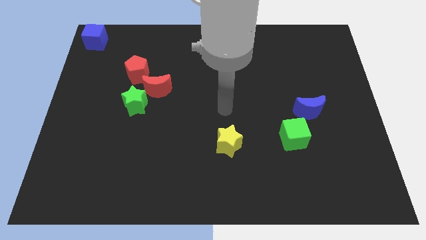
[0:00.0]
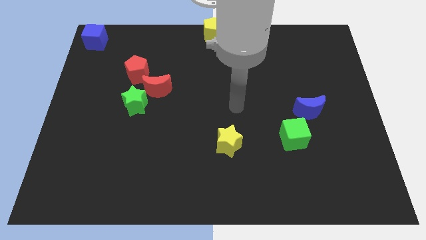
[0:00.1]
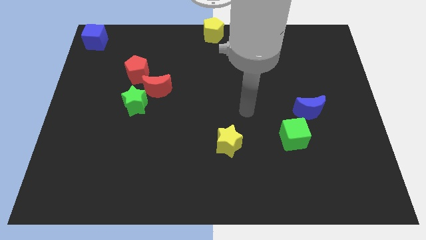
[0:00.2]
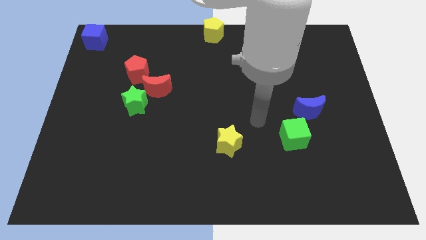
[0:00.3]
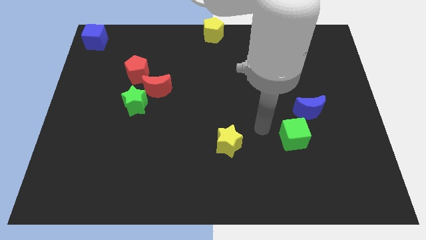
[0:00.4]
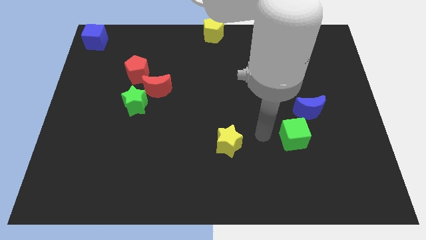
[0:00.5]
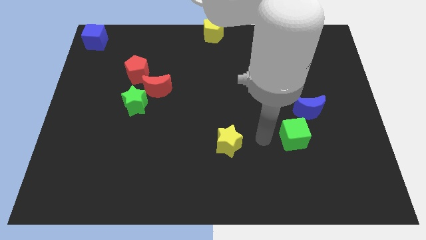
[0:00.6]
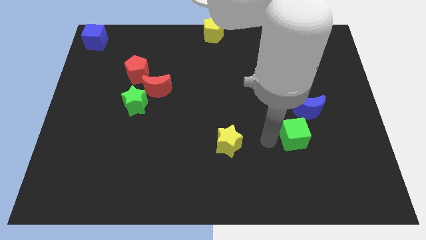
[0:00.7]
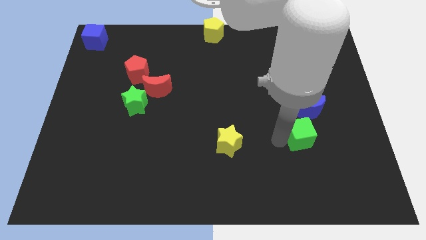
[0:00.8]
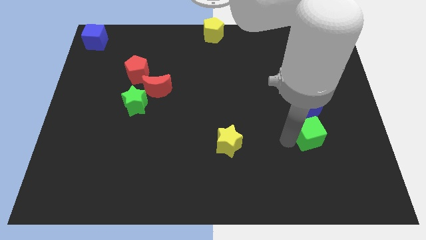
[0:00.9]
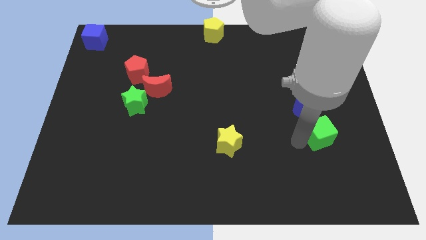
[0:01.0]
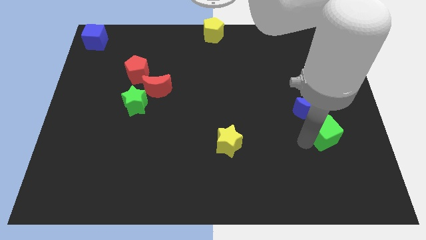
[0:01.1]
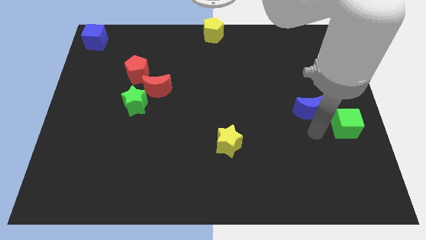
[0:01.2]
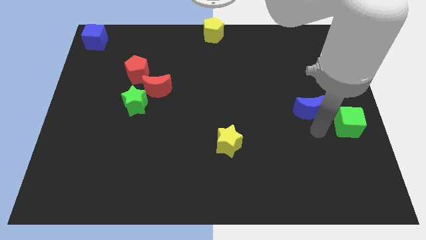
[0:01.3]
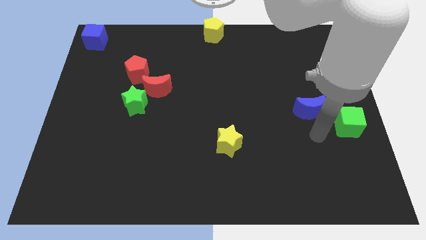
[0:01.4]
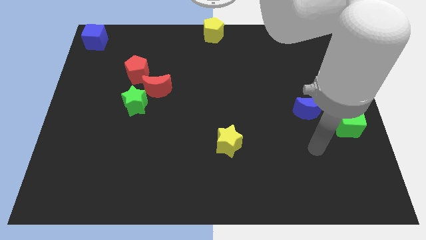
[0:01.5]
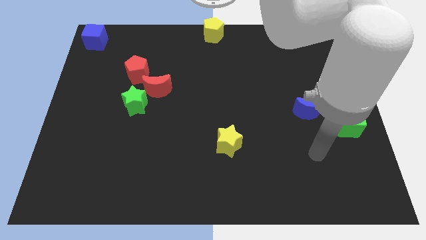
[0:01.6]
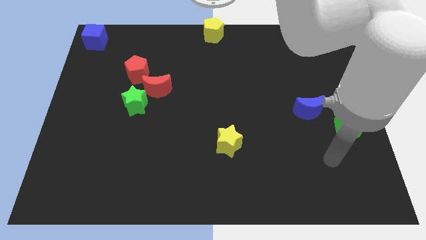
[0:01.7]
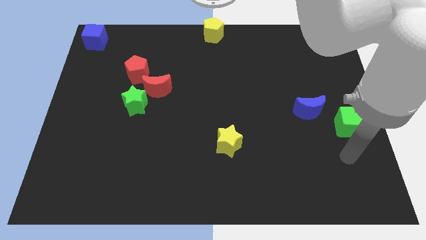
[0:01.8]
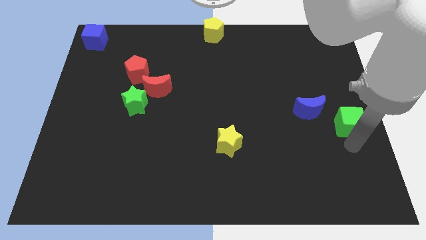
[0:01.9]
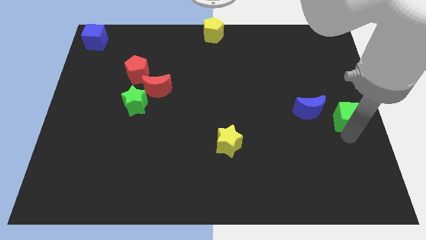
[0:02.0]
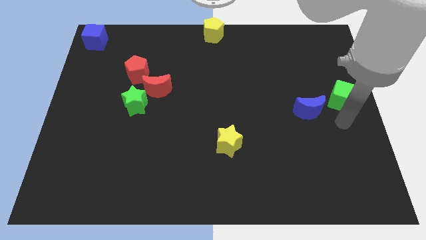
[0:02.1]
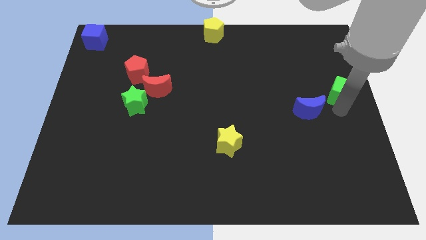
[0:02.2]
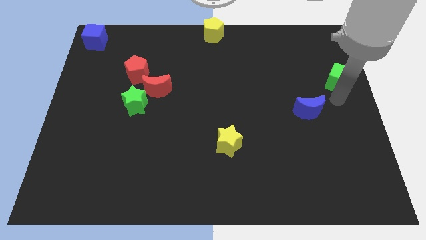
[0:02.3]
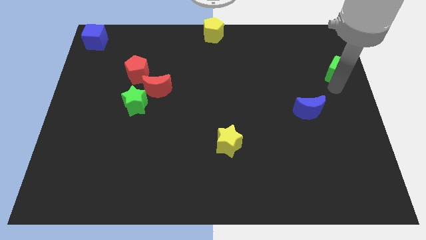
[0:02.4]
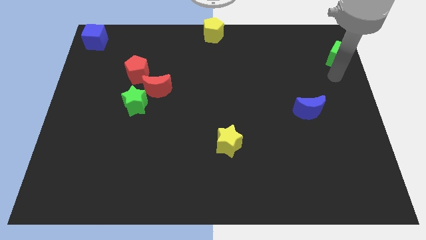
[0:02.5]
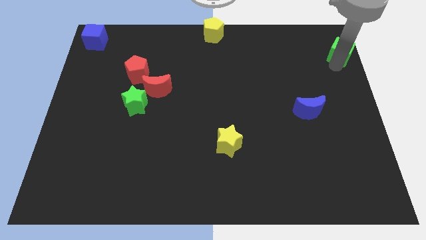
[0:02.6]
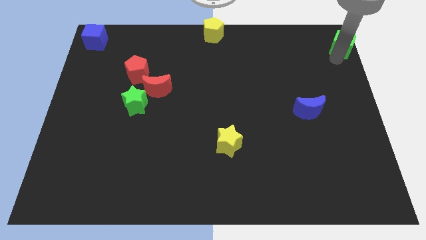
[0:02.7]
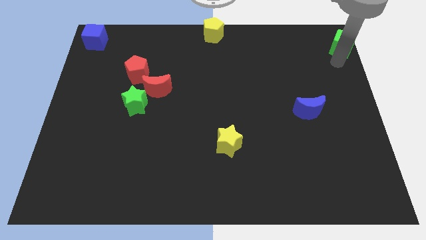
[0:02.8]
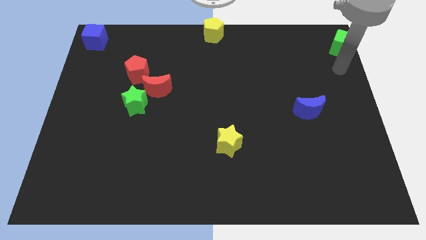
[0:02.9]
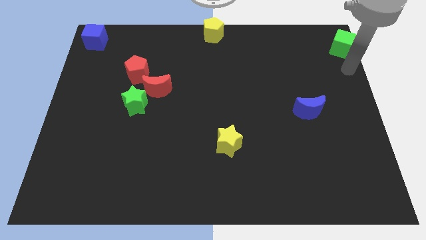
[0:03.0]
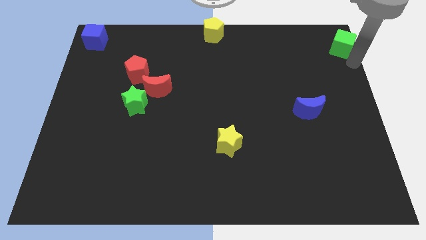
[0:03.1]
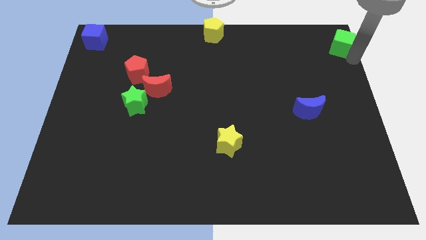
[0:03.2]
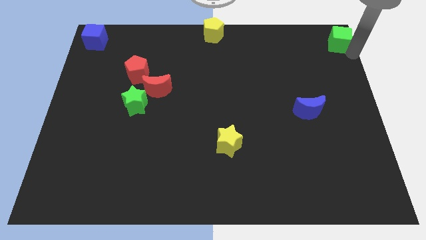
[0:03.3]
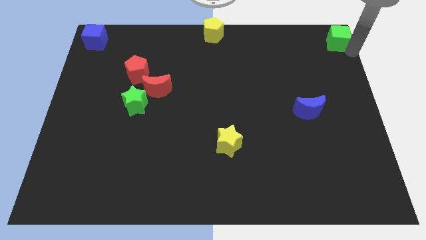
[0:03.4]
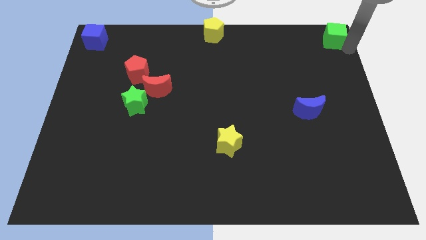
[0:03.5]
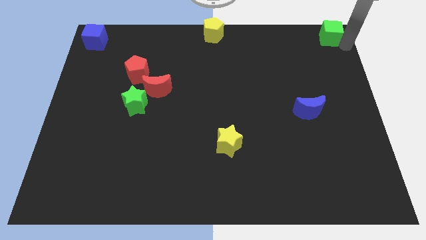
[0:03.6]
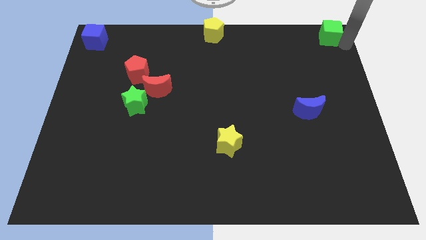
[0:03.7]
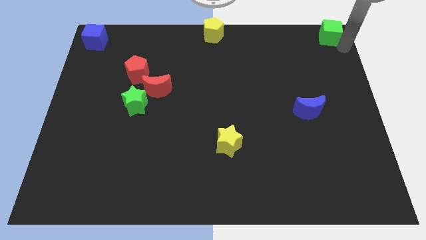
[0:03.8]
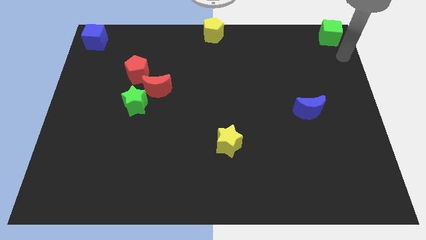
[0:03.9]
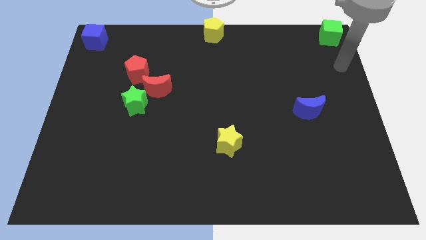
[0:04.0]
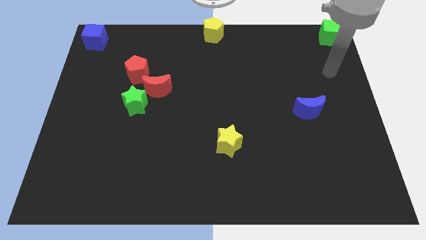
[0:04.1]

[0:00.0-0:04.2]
move the green cube to the top right corner of the board

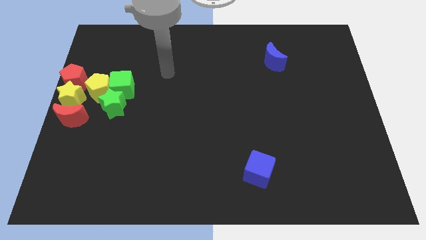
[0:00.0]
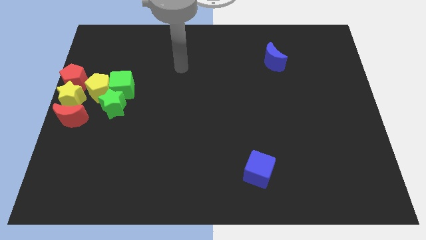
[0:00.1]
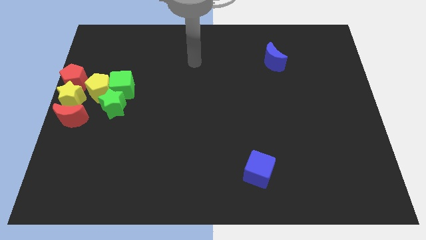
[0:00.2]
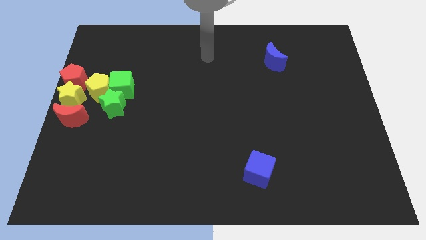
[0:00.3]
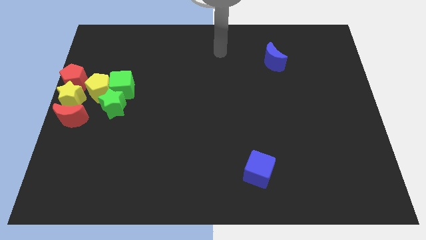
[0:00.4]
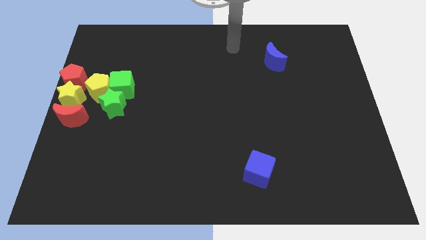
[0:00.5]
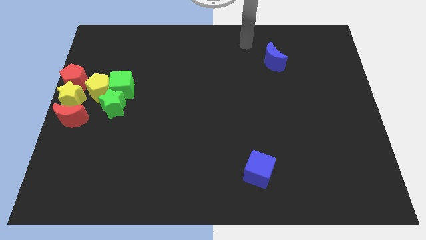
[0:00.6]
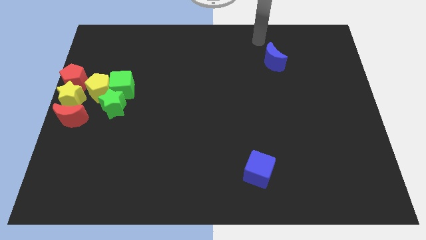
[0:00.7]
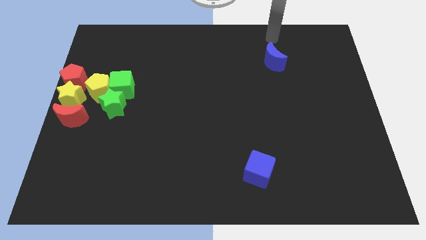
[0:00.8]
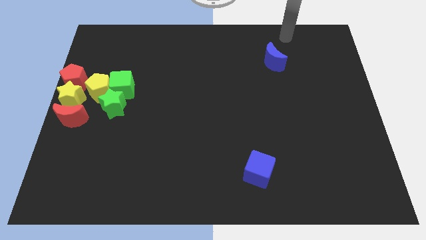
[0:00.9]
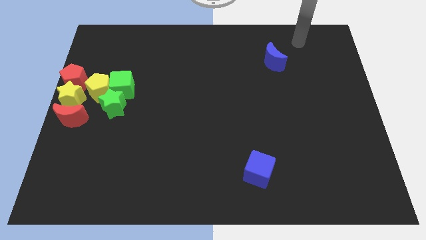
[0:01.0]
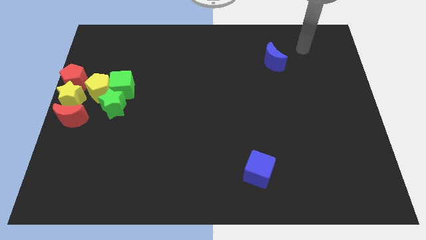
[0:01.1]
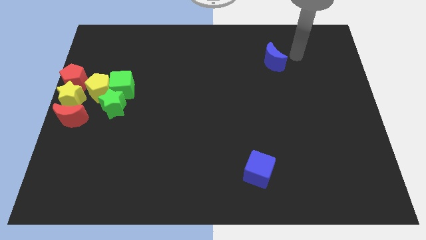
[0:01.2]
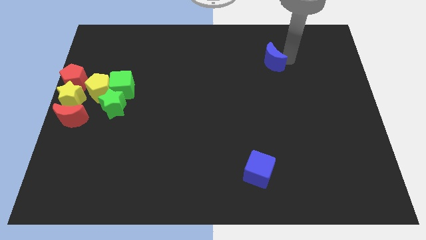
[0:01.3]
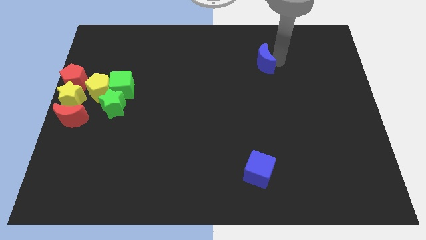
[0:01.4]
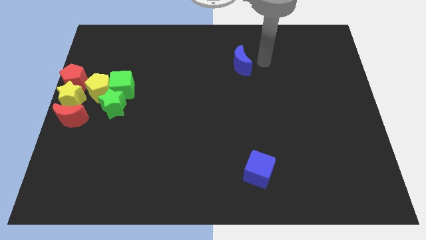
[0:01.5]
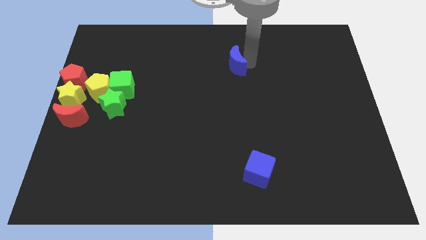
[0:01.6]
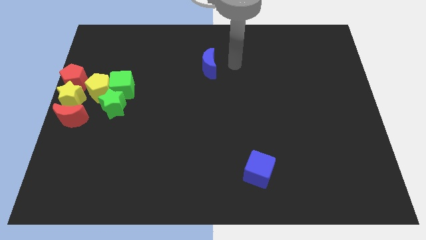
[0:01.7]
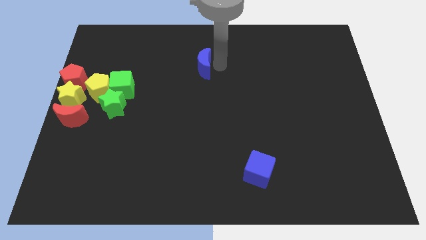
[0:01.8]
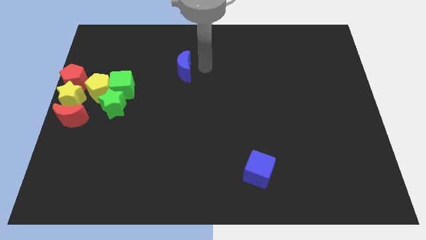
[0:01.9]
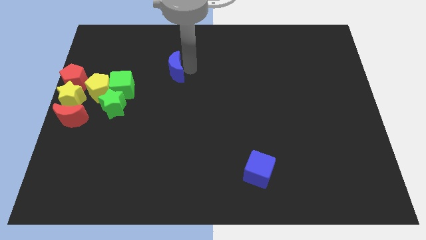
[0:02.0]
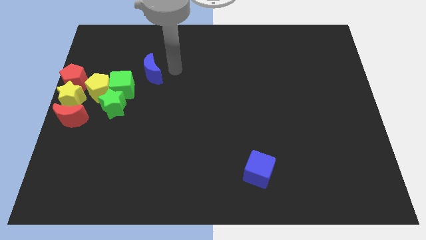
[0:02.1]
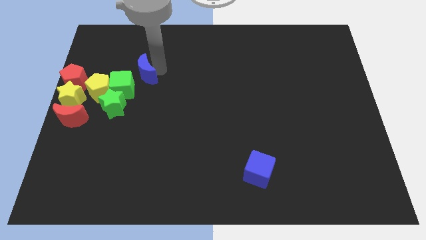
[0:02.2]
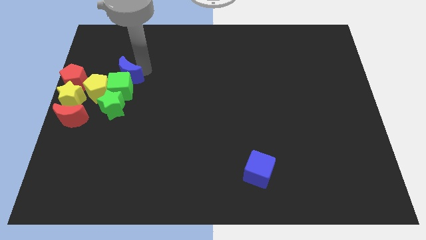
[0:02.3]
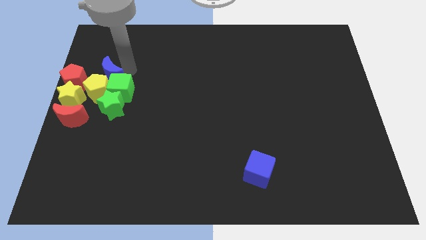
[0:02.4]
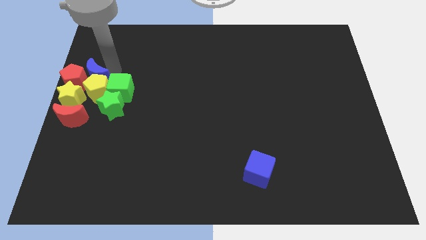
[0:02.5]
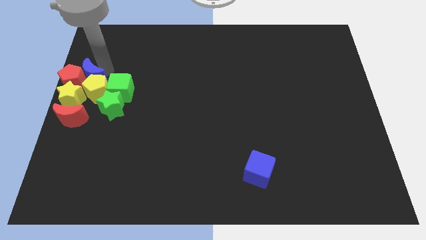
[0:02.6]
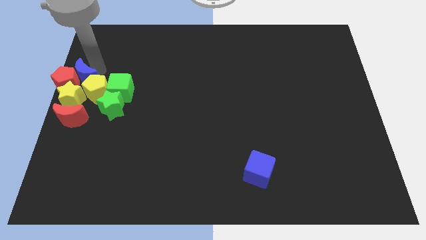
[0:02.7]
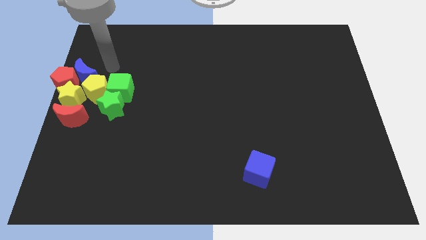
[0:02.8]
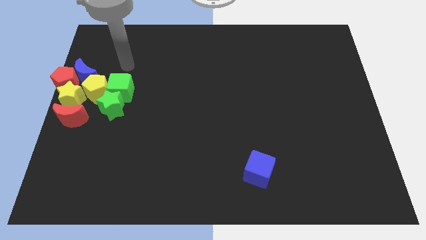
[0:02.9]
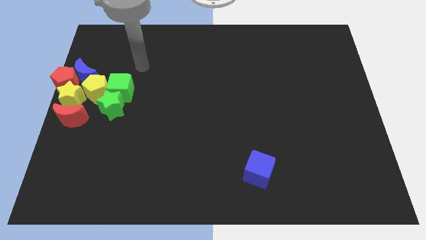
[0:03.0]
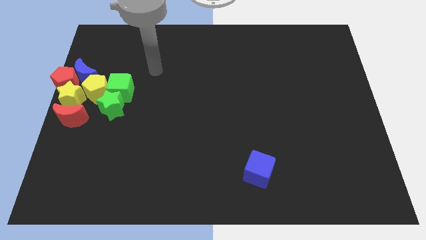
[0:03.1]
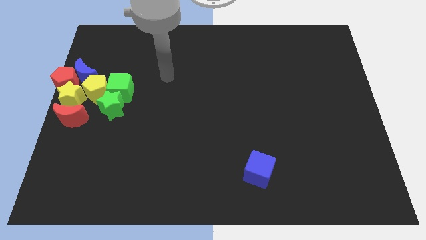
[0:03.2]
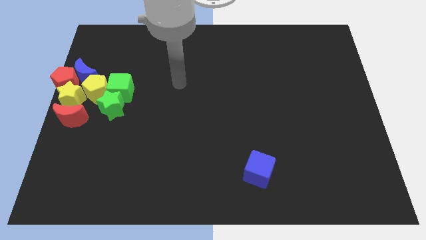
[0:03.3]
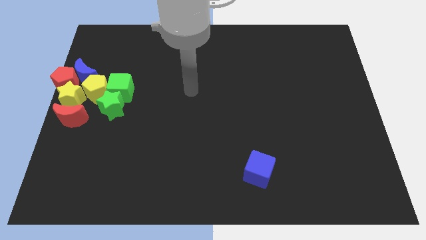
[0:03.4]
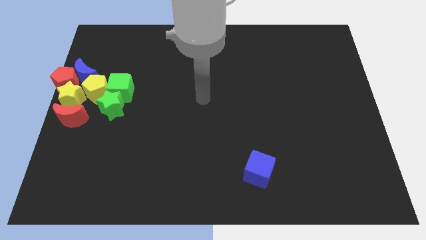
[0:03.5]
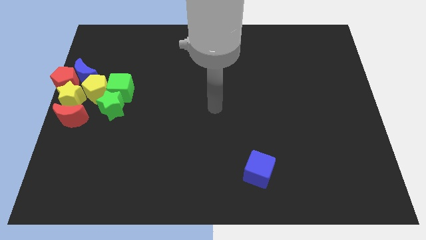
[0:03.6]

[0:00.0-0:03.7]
move the blue moon near to the group of blocks

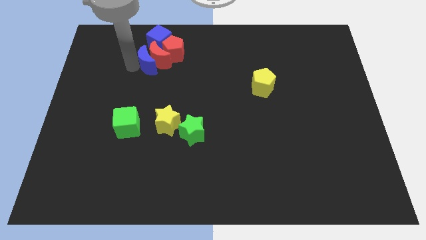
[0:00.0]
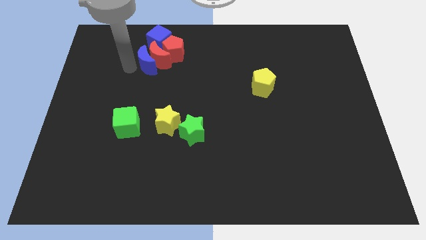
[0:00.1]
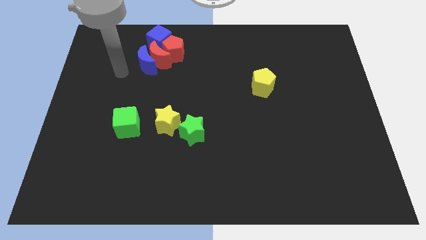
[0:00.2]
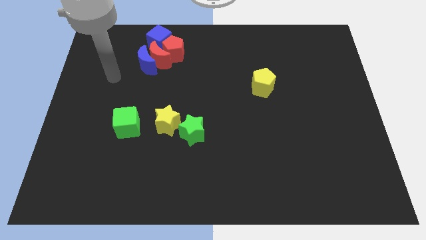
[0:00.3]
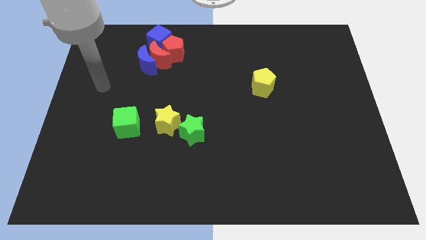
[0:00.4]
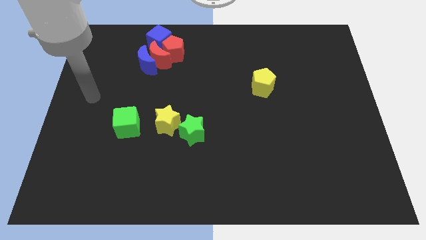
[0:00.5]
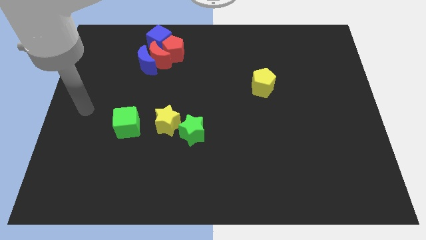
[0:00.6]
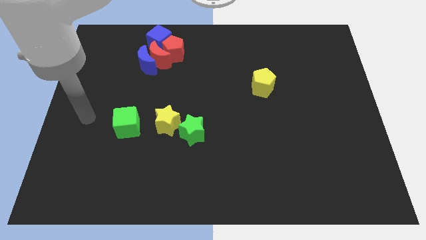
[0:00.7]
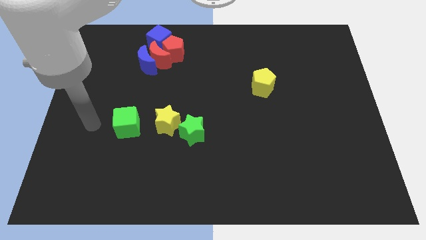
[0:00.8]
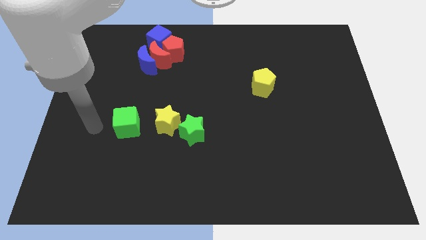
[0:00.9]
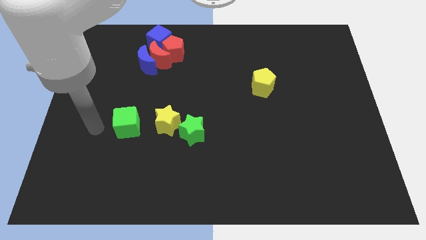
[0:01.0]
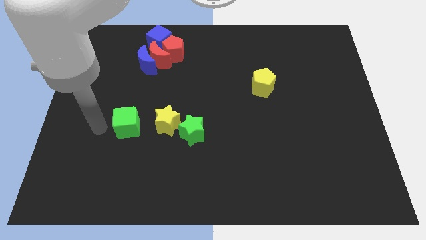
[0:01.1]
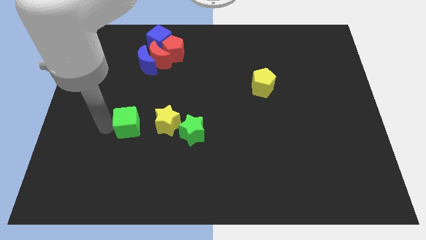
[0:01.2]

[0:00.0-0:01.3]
point your arm at the left of the green cube
